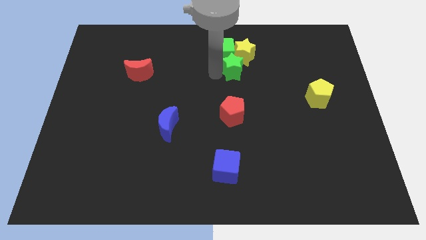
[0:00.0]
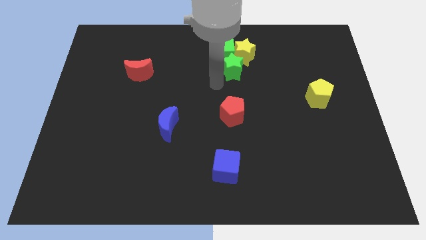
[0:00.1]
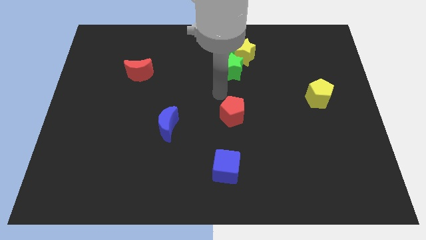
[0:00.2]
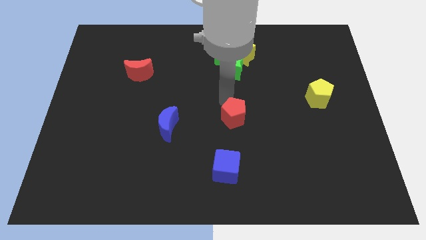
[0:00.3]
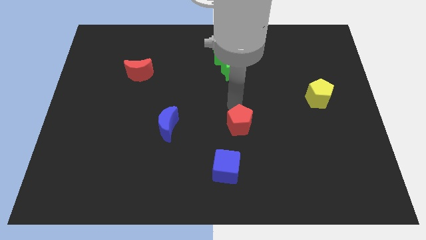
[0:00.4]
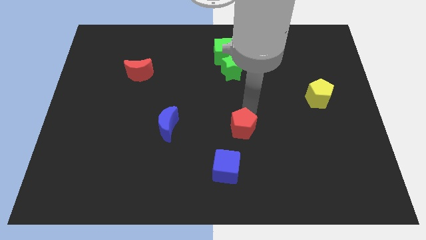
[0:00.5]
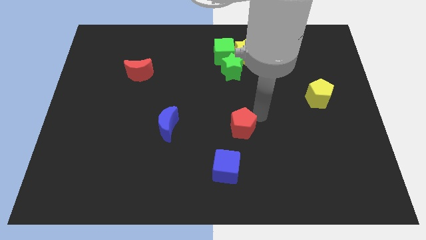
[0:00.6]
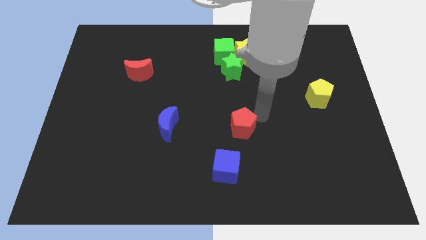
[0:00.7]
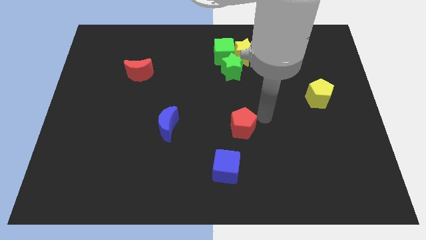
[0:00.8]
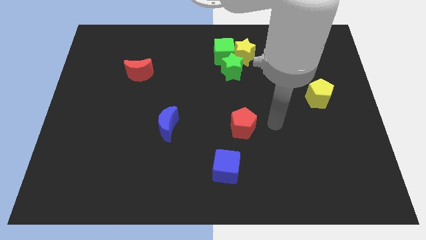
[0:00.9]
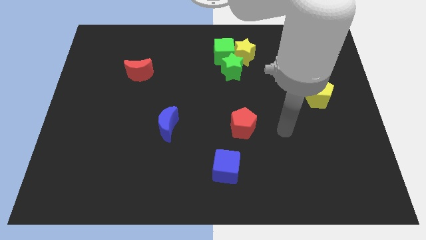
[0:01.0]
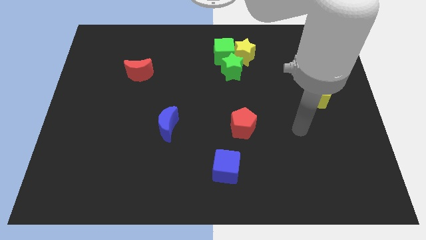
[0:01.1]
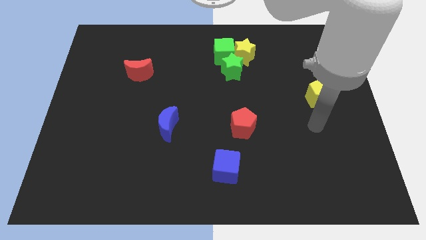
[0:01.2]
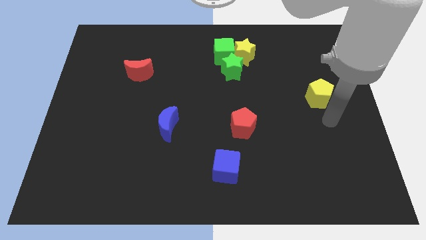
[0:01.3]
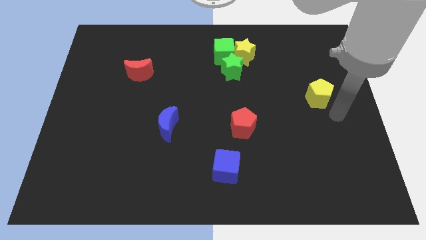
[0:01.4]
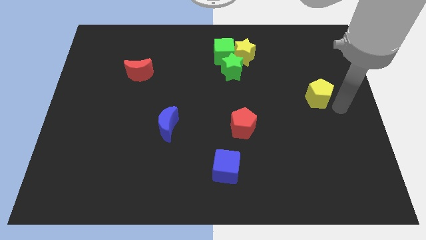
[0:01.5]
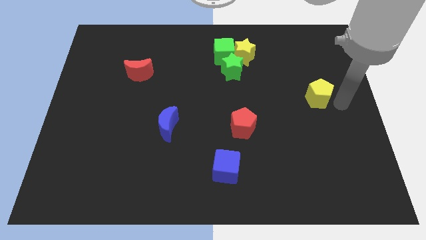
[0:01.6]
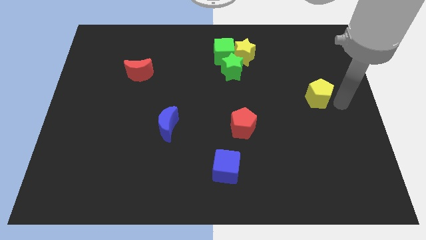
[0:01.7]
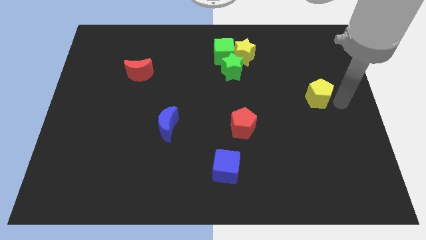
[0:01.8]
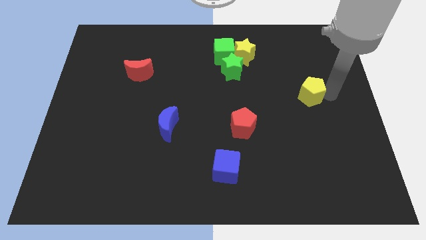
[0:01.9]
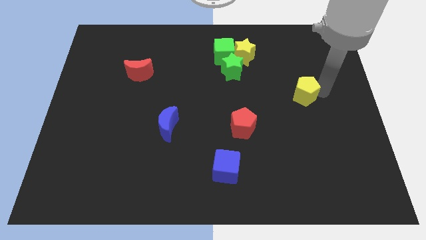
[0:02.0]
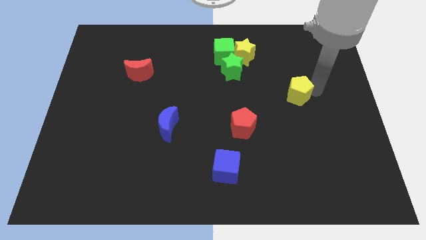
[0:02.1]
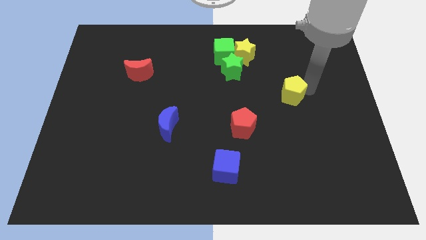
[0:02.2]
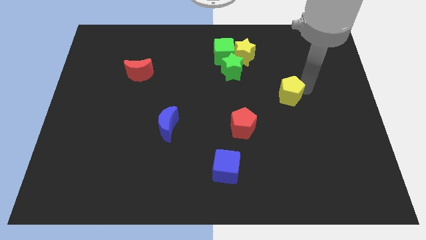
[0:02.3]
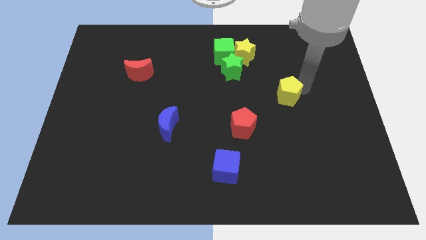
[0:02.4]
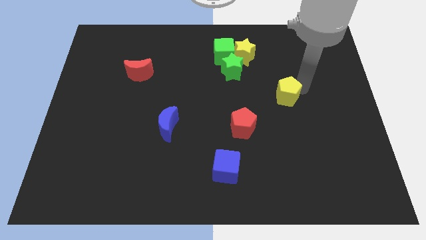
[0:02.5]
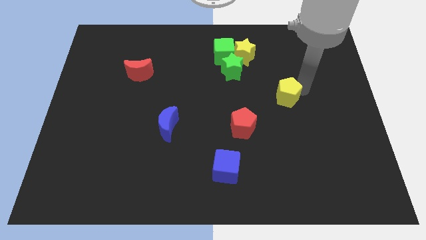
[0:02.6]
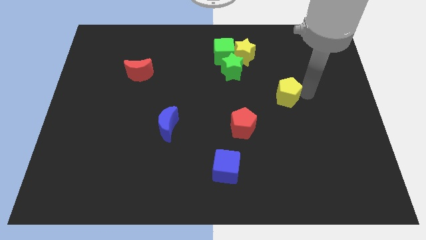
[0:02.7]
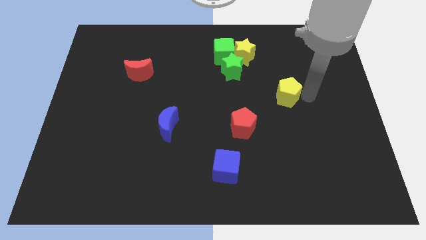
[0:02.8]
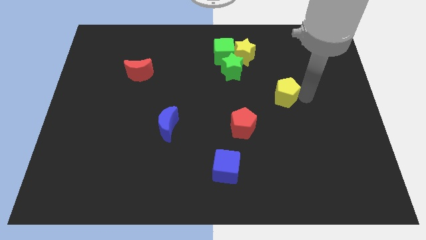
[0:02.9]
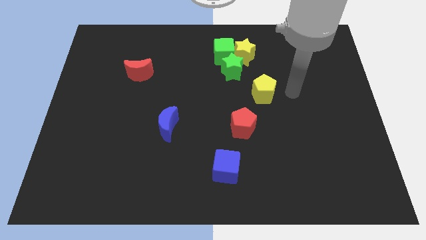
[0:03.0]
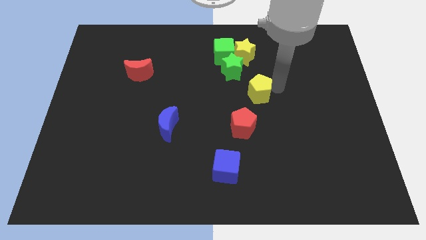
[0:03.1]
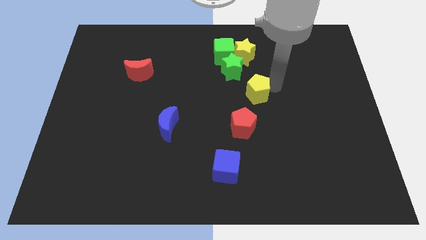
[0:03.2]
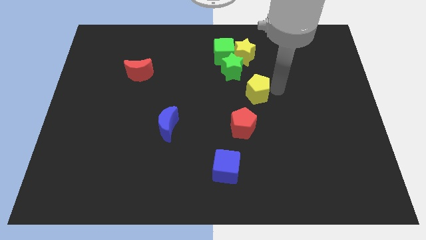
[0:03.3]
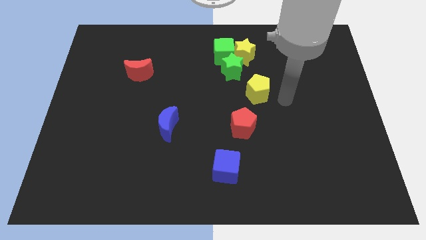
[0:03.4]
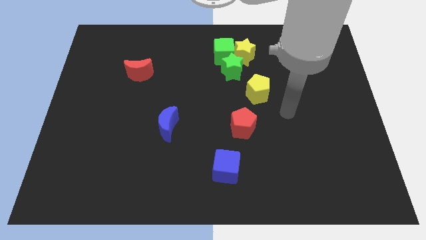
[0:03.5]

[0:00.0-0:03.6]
place the yellow pentagon diagonally top right to red pentagon

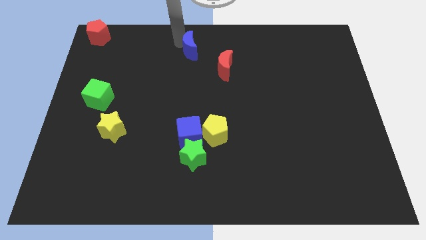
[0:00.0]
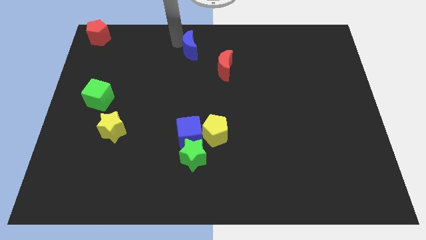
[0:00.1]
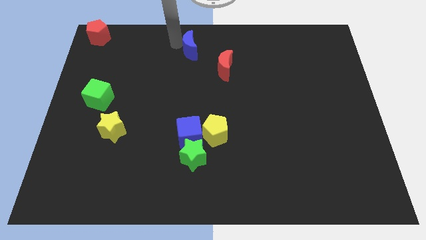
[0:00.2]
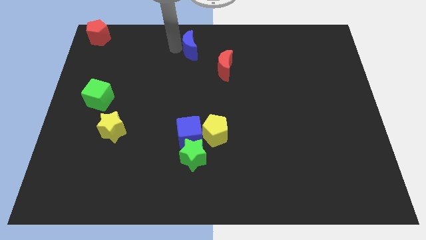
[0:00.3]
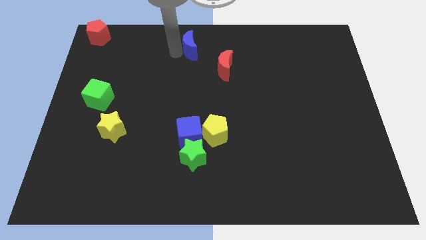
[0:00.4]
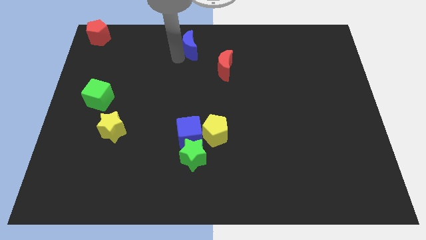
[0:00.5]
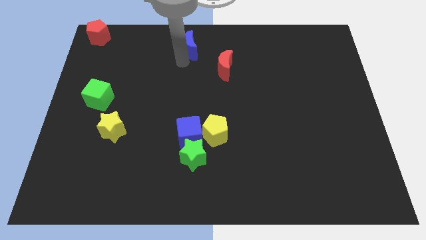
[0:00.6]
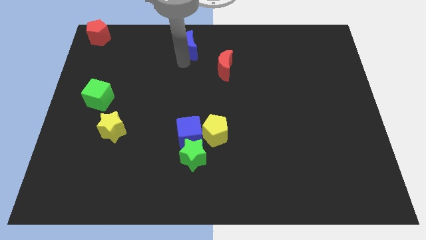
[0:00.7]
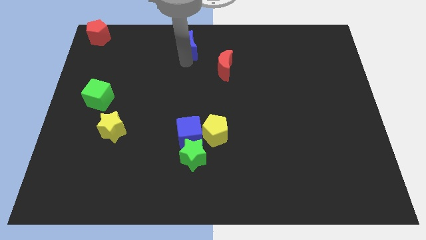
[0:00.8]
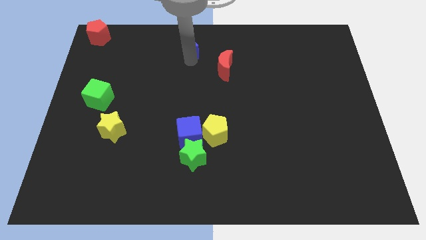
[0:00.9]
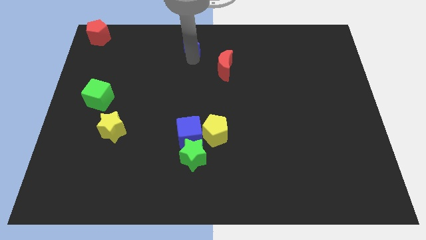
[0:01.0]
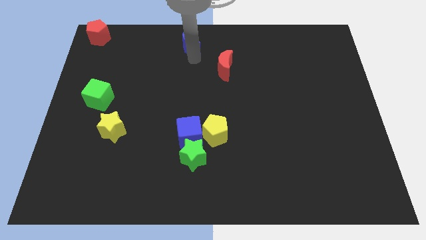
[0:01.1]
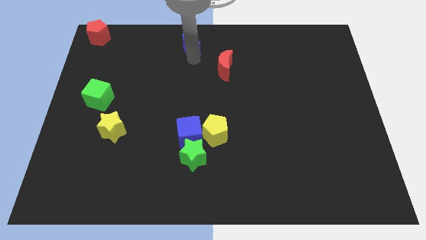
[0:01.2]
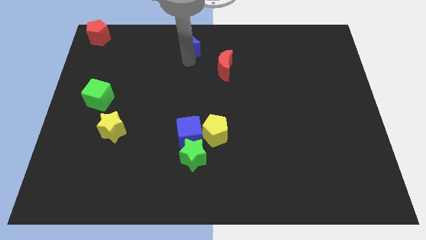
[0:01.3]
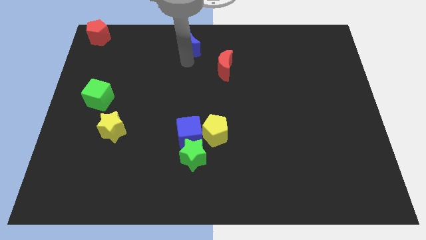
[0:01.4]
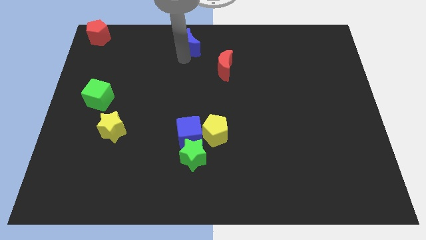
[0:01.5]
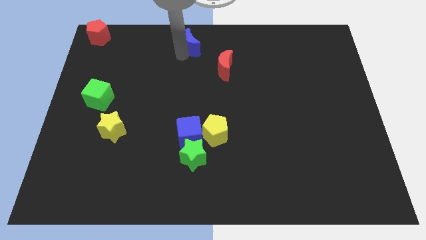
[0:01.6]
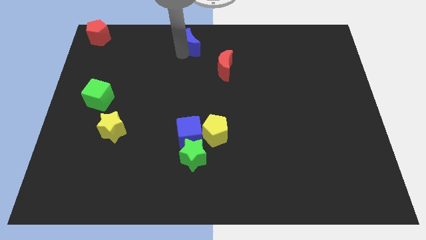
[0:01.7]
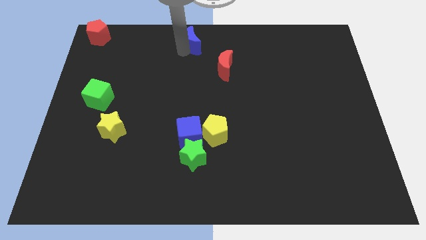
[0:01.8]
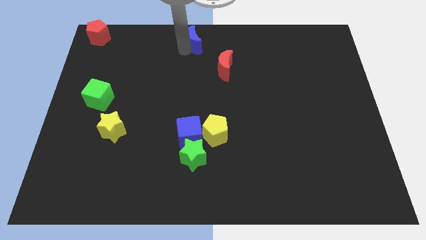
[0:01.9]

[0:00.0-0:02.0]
move blue moon towards the top center

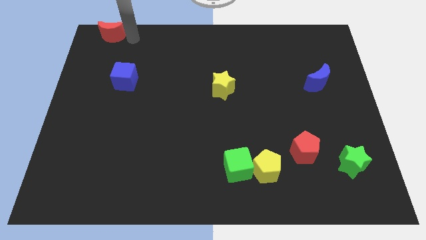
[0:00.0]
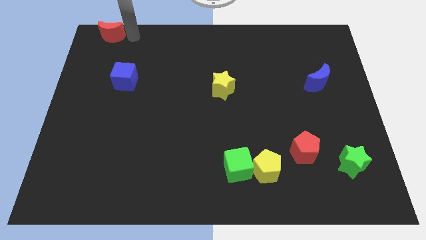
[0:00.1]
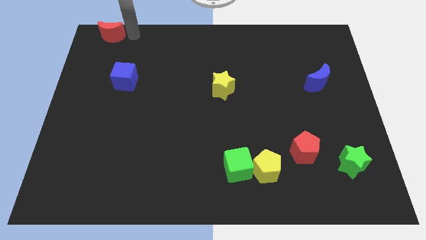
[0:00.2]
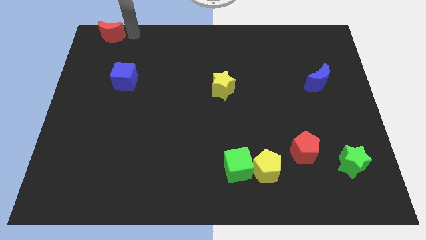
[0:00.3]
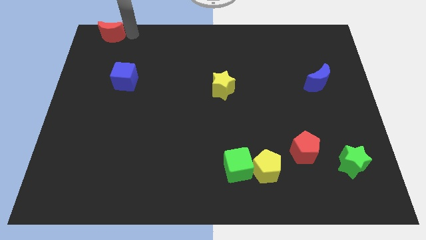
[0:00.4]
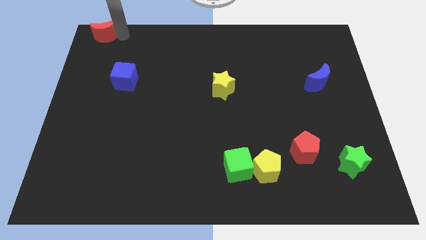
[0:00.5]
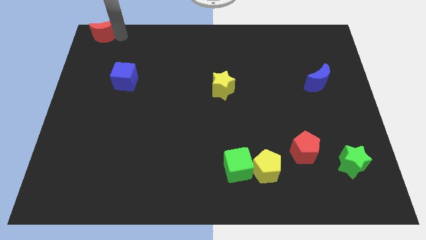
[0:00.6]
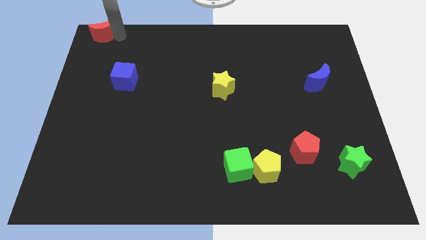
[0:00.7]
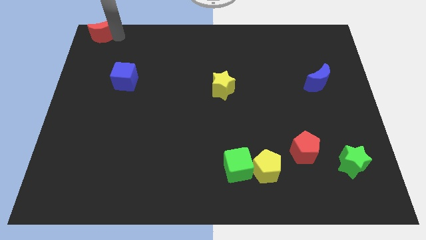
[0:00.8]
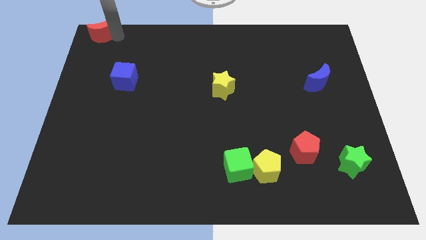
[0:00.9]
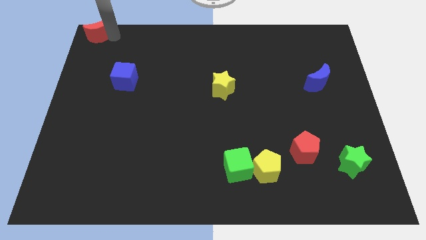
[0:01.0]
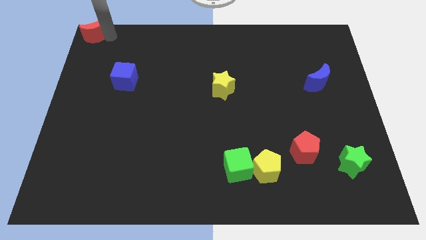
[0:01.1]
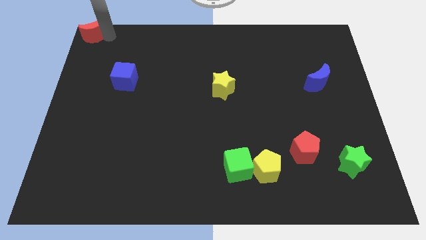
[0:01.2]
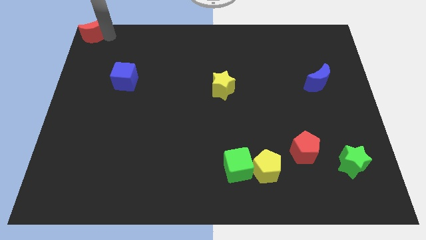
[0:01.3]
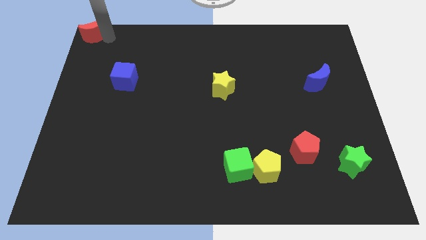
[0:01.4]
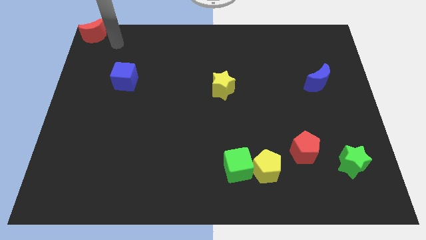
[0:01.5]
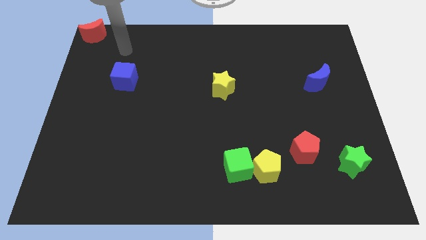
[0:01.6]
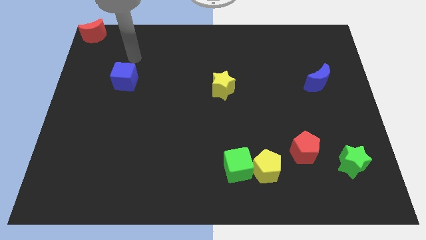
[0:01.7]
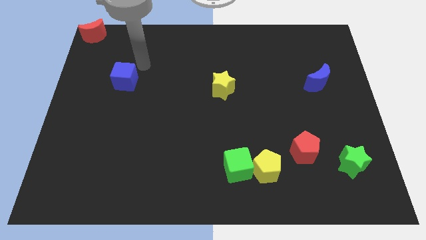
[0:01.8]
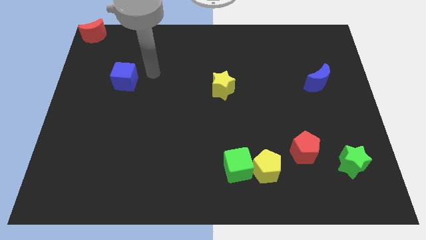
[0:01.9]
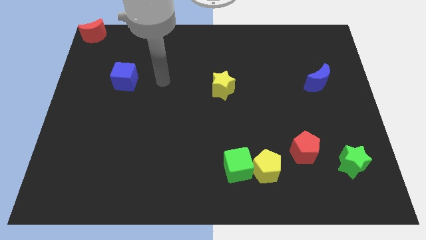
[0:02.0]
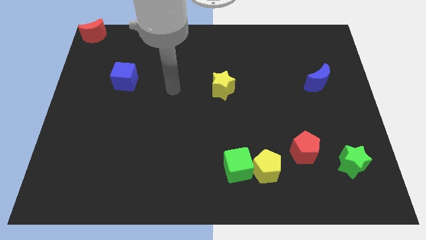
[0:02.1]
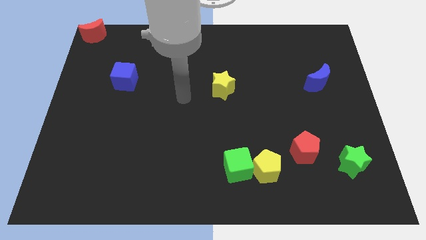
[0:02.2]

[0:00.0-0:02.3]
place the red crescent at the top left corner of the board

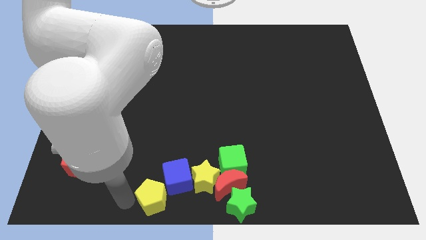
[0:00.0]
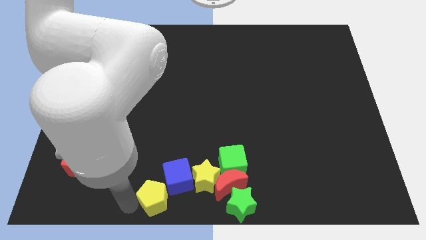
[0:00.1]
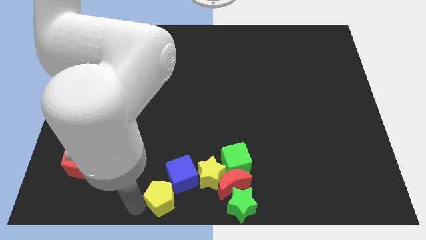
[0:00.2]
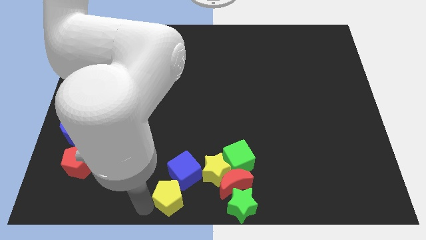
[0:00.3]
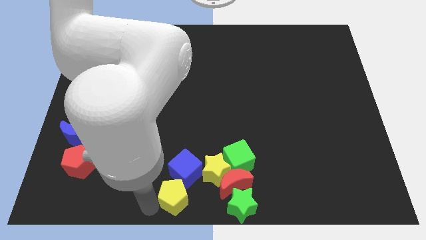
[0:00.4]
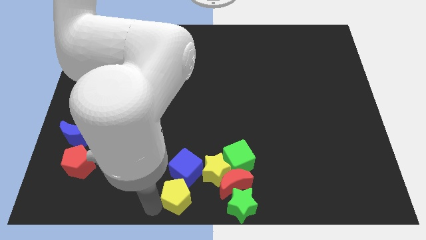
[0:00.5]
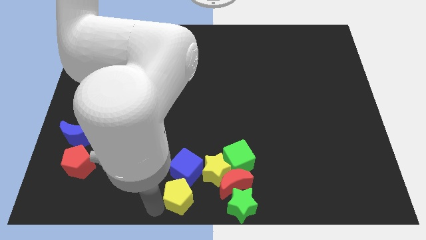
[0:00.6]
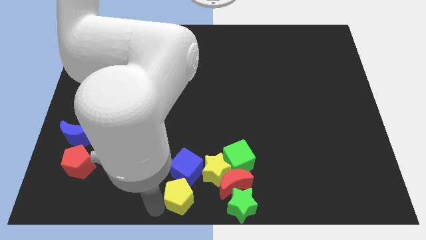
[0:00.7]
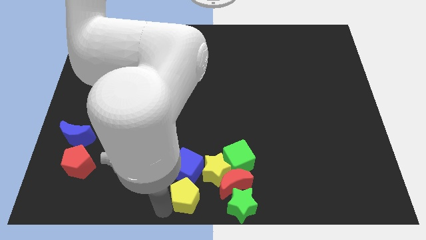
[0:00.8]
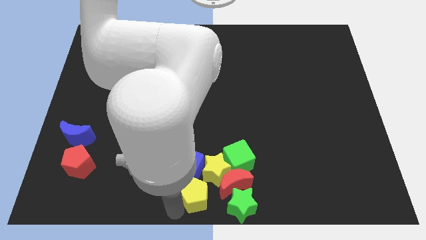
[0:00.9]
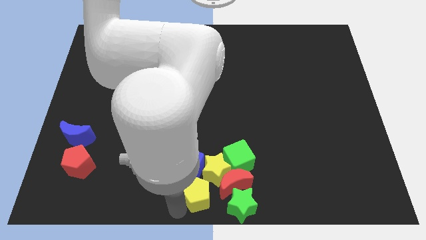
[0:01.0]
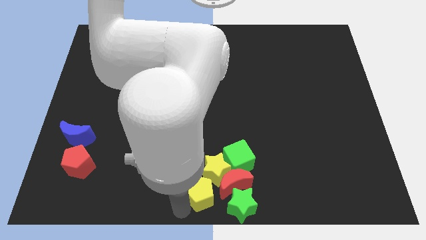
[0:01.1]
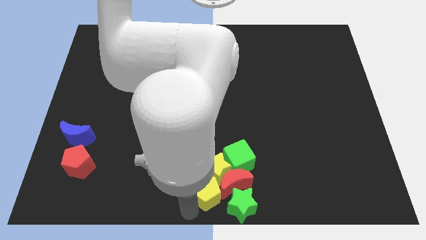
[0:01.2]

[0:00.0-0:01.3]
move blue cube with the help of yellow pentagon
